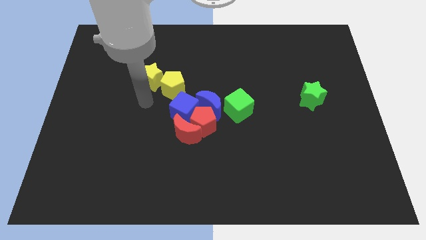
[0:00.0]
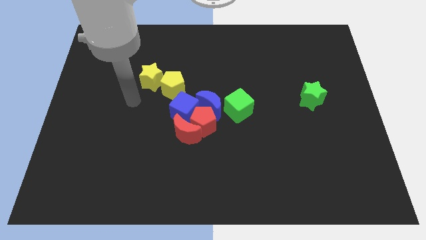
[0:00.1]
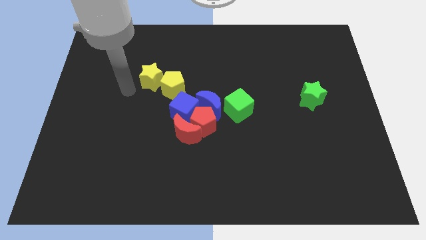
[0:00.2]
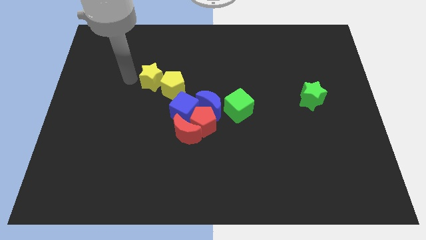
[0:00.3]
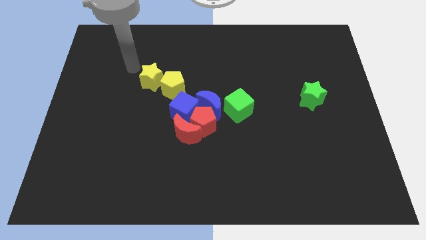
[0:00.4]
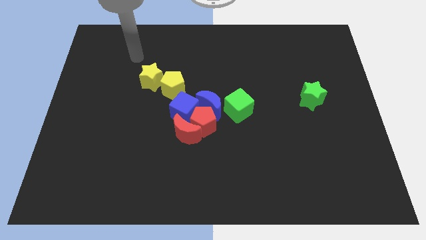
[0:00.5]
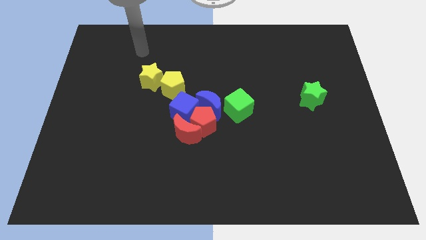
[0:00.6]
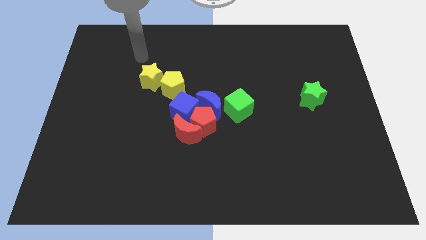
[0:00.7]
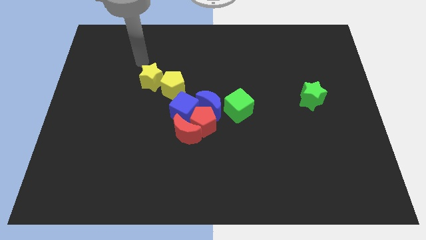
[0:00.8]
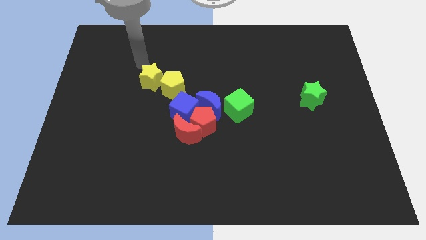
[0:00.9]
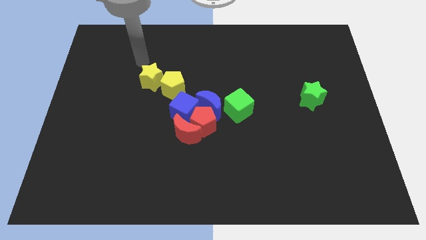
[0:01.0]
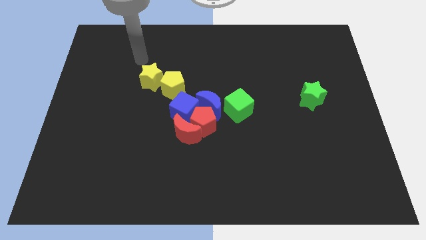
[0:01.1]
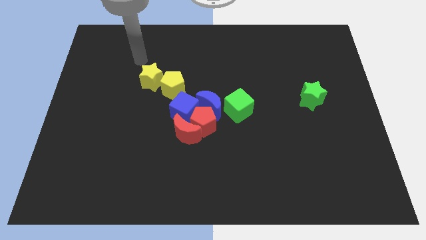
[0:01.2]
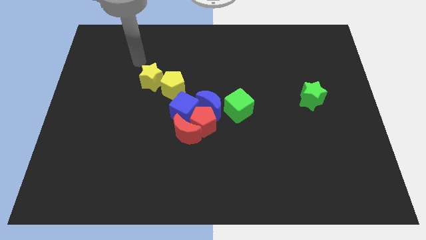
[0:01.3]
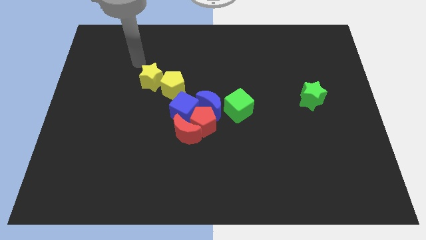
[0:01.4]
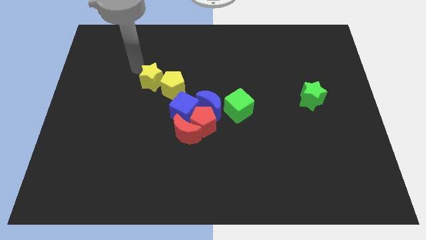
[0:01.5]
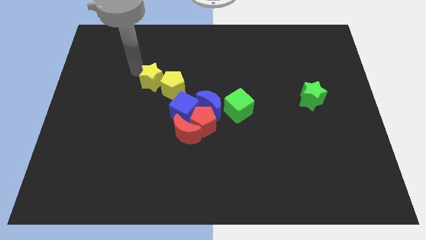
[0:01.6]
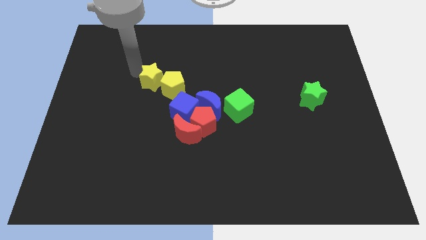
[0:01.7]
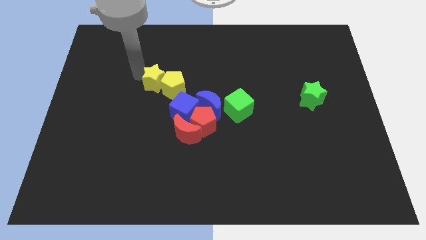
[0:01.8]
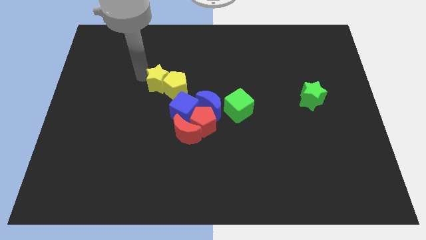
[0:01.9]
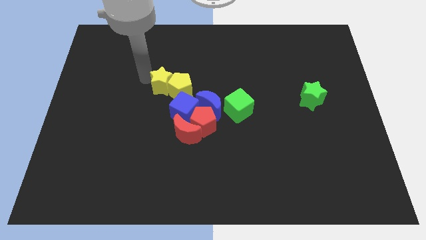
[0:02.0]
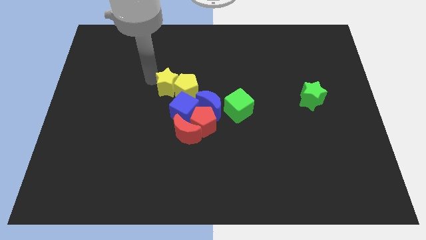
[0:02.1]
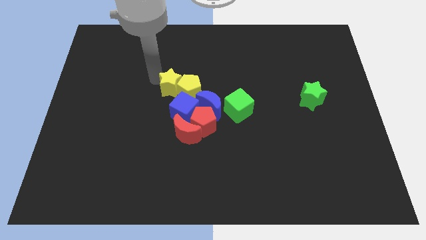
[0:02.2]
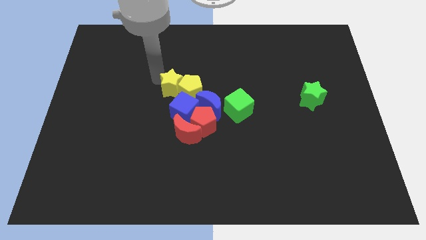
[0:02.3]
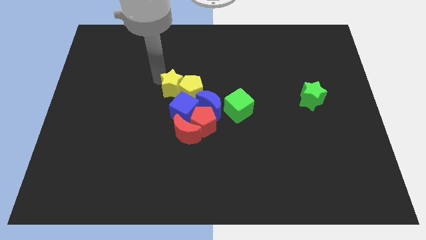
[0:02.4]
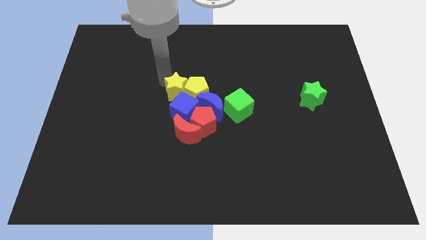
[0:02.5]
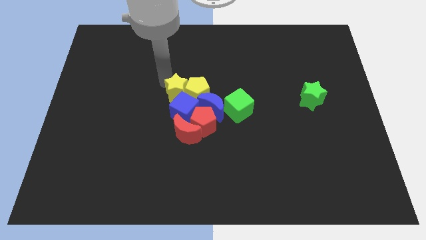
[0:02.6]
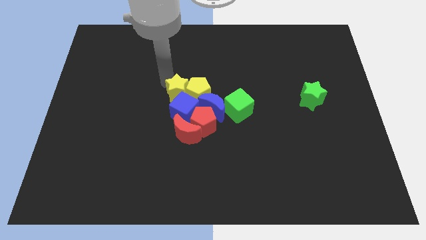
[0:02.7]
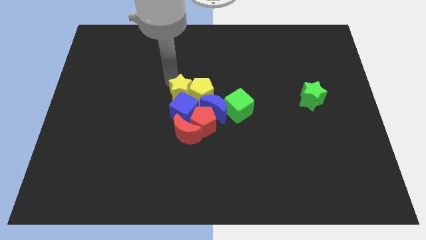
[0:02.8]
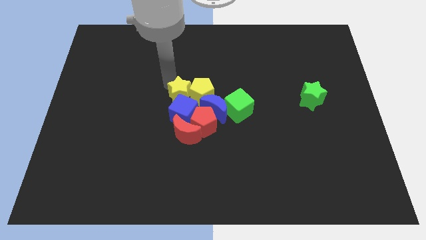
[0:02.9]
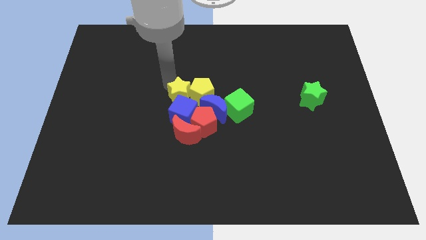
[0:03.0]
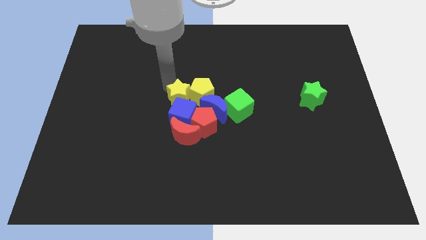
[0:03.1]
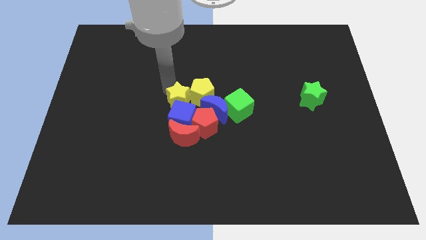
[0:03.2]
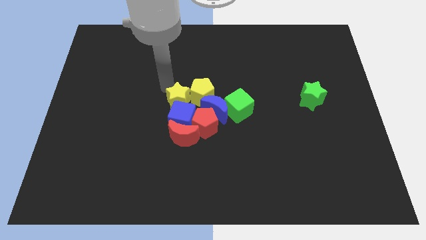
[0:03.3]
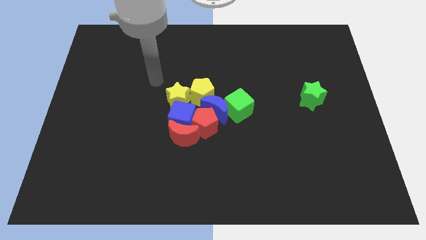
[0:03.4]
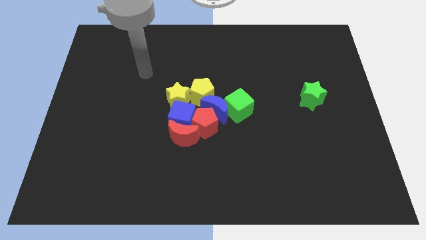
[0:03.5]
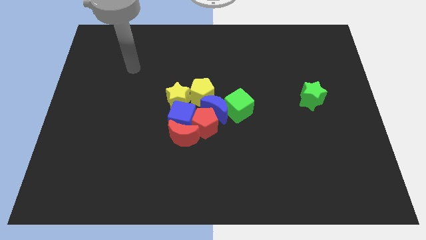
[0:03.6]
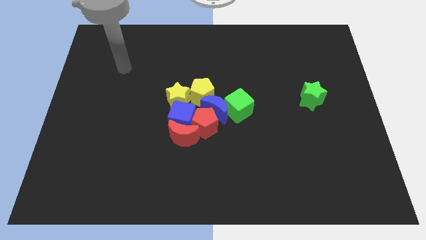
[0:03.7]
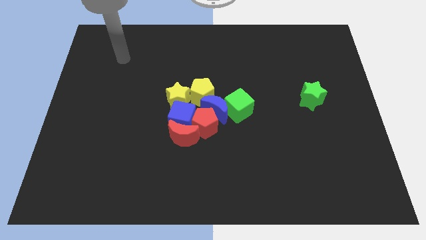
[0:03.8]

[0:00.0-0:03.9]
push the yellow star to the left of the yellow pentagon

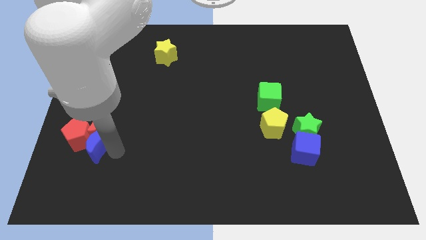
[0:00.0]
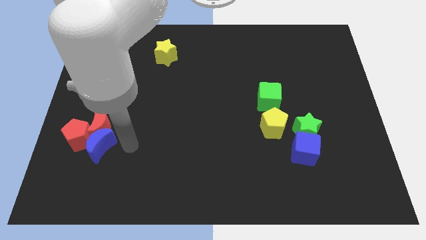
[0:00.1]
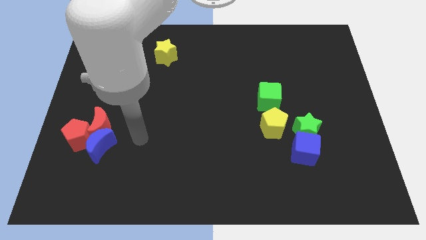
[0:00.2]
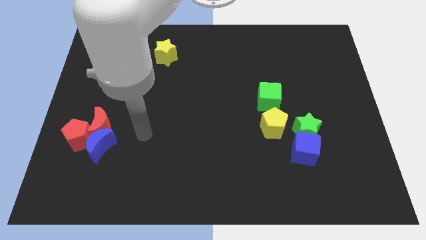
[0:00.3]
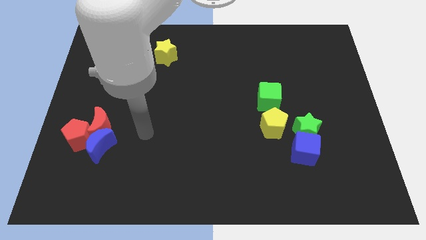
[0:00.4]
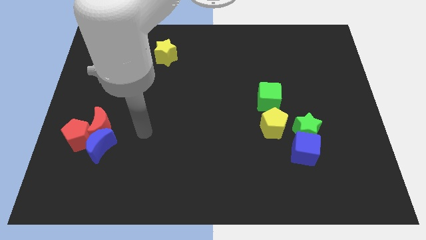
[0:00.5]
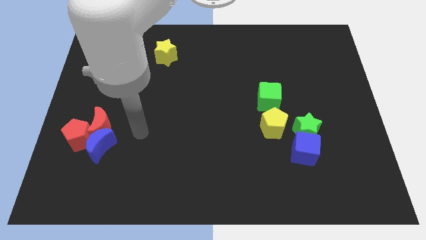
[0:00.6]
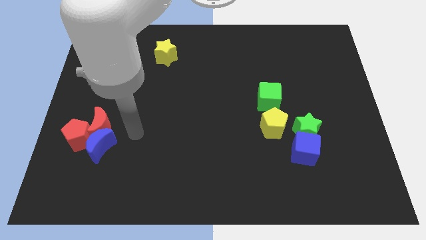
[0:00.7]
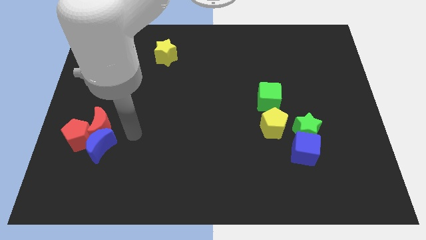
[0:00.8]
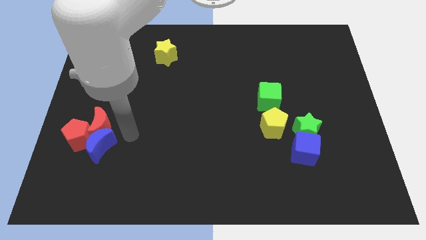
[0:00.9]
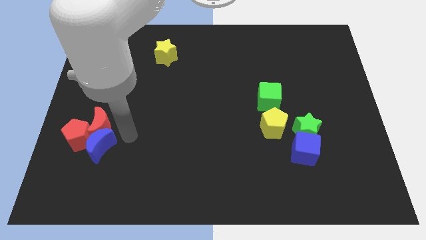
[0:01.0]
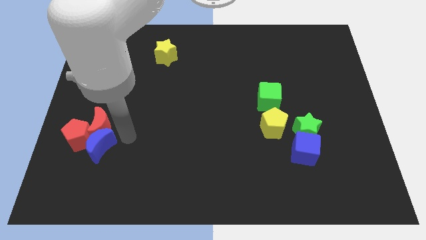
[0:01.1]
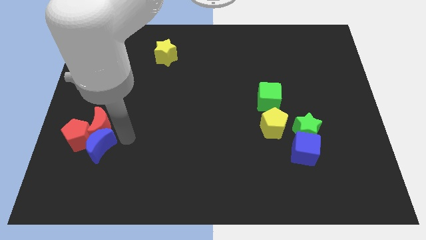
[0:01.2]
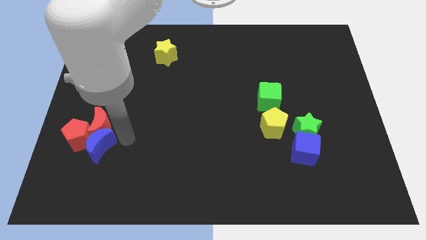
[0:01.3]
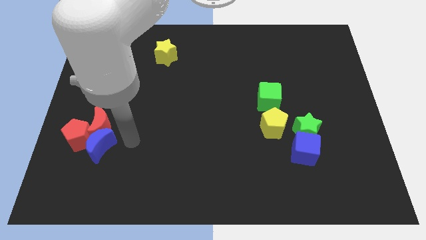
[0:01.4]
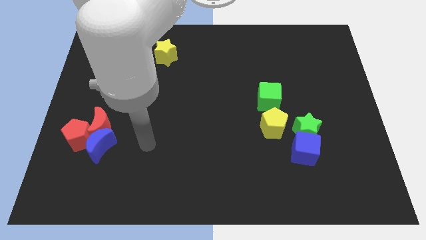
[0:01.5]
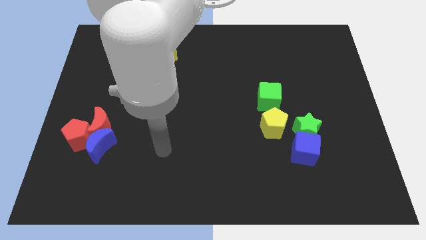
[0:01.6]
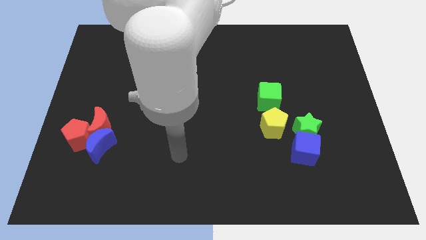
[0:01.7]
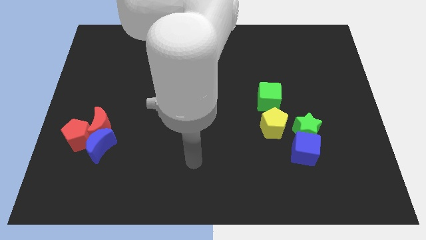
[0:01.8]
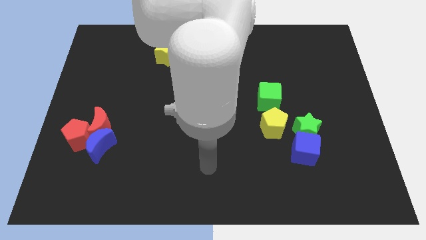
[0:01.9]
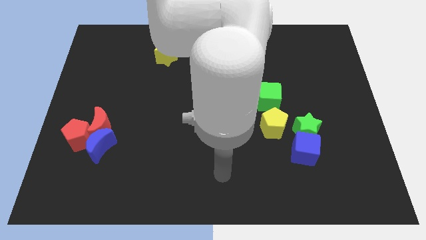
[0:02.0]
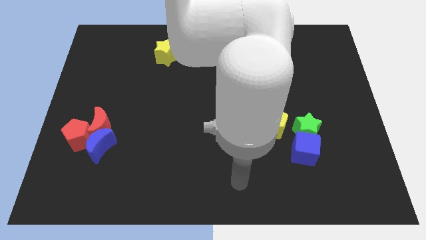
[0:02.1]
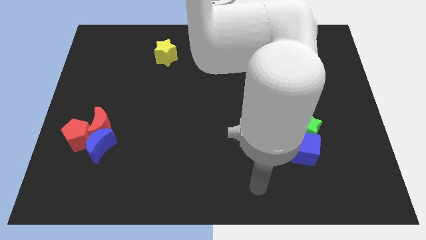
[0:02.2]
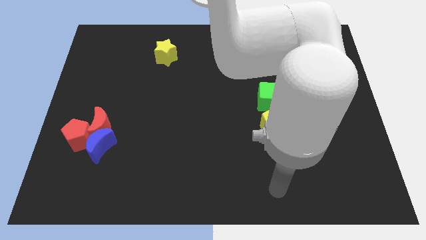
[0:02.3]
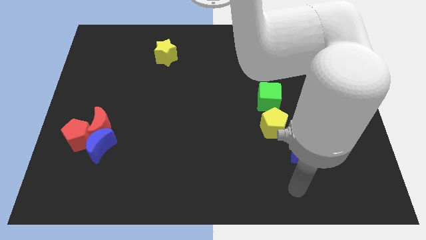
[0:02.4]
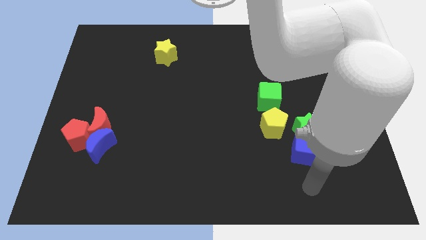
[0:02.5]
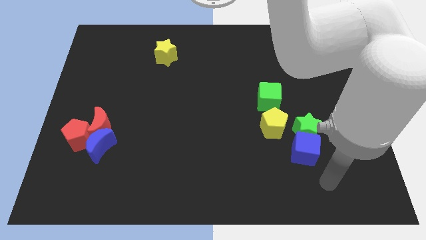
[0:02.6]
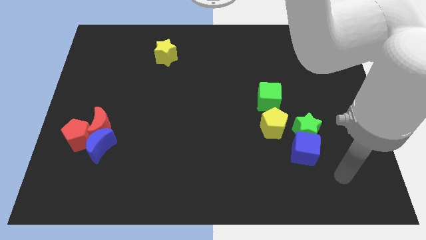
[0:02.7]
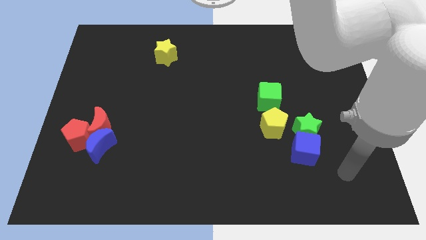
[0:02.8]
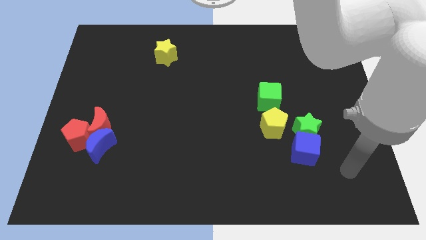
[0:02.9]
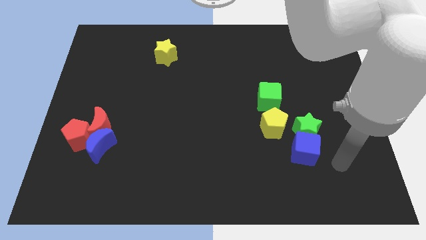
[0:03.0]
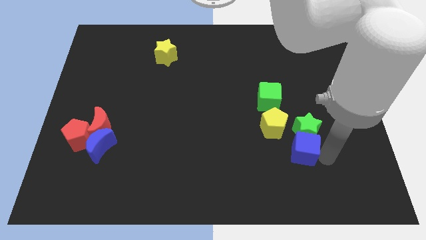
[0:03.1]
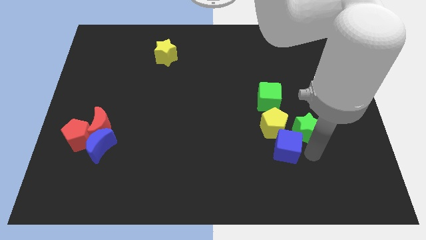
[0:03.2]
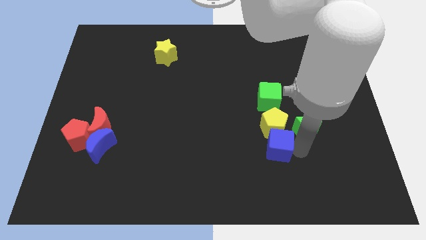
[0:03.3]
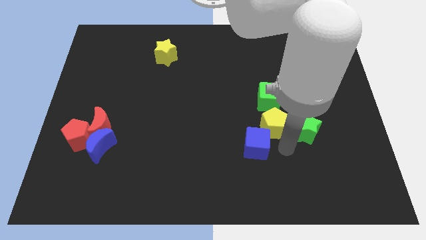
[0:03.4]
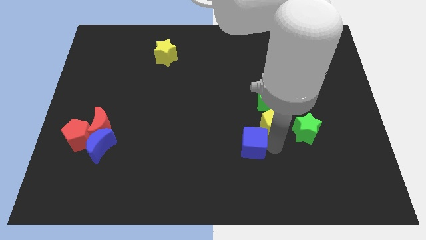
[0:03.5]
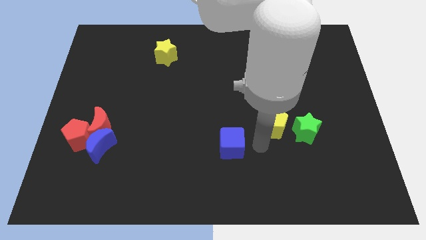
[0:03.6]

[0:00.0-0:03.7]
put the blue cube diagonally bottom left to the yellow pentagon

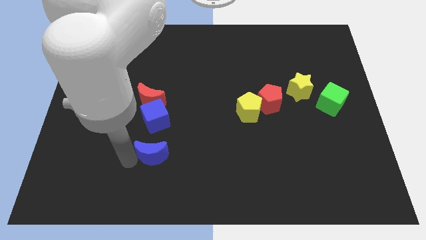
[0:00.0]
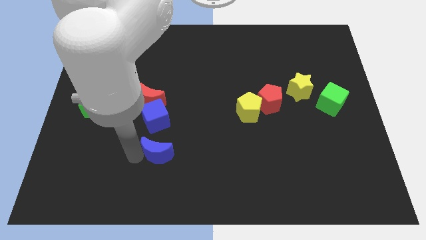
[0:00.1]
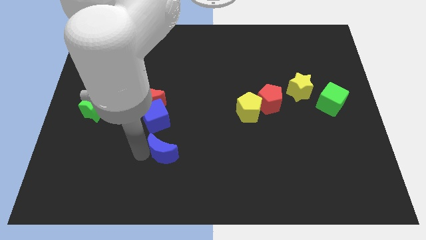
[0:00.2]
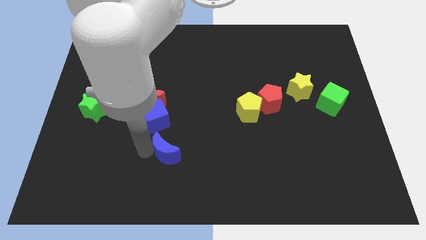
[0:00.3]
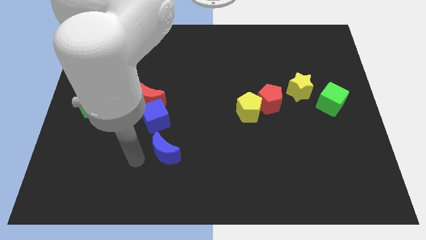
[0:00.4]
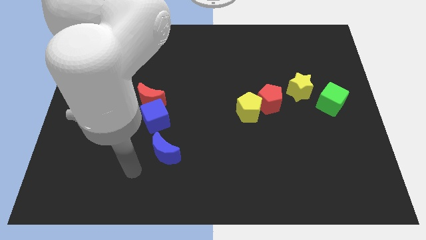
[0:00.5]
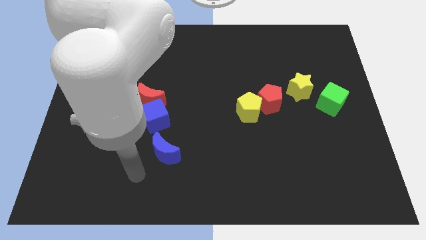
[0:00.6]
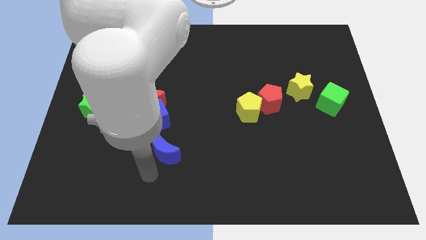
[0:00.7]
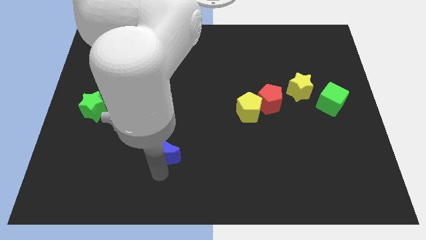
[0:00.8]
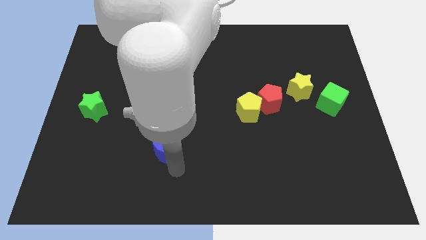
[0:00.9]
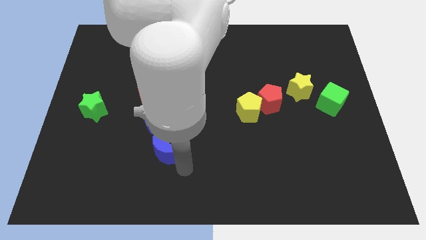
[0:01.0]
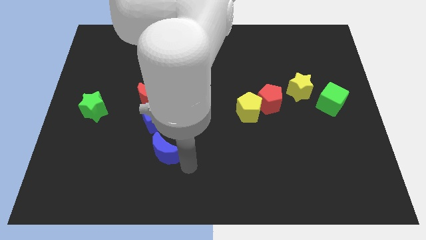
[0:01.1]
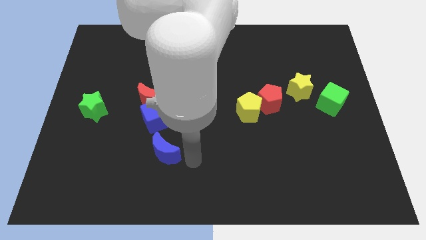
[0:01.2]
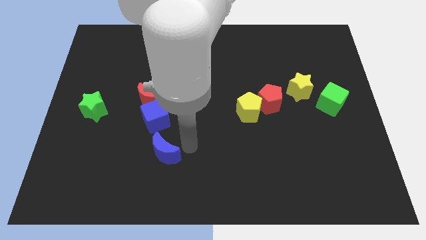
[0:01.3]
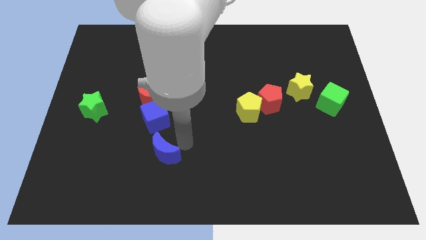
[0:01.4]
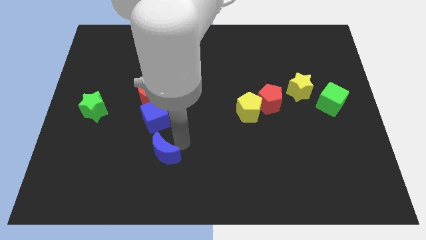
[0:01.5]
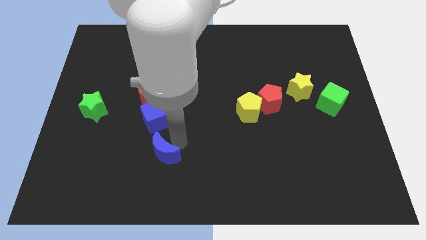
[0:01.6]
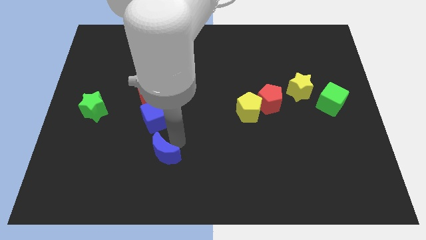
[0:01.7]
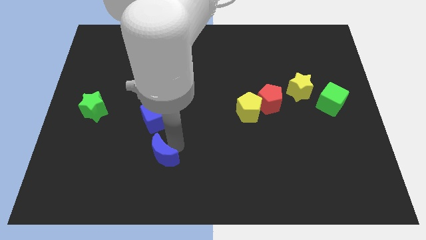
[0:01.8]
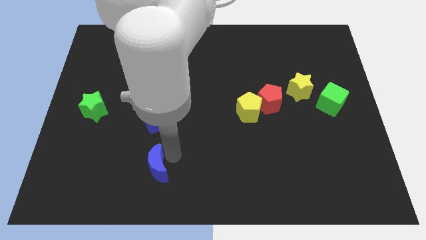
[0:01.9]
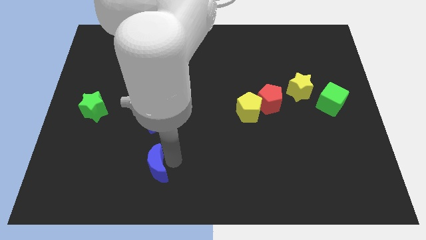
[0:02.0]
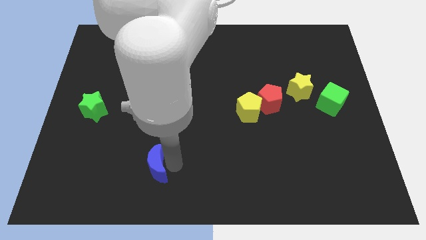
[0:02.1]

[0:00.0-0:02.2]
move the blue crescent below the blue cube
